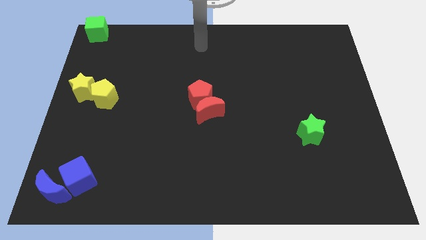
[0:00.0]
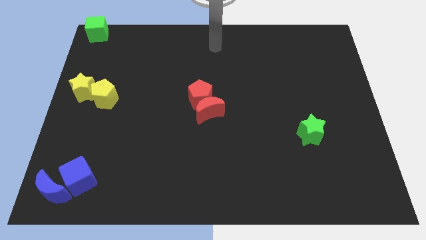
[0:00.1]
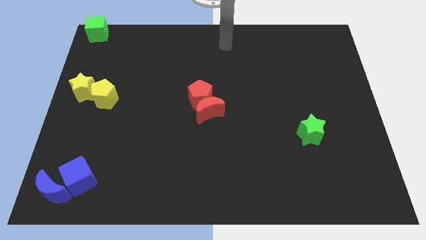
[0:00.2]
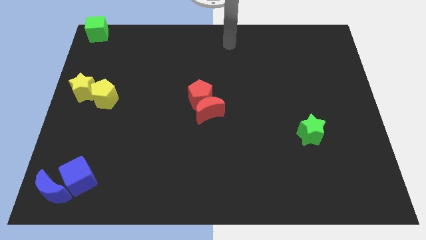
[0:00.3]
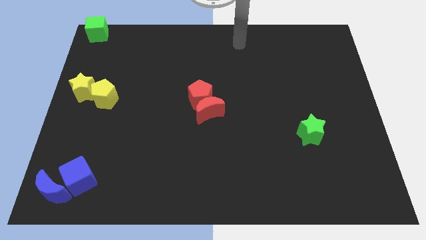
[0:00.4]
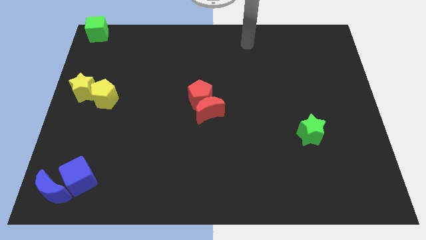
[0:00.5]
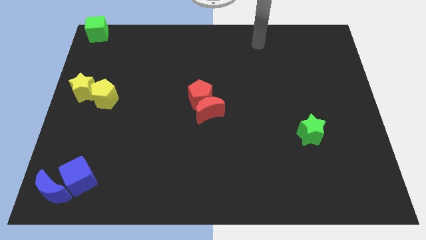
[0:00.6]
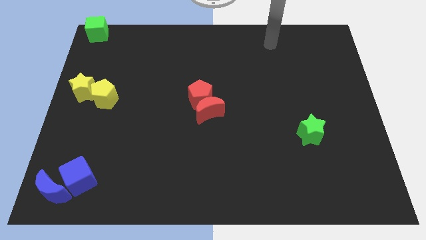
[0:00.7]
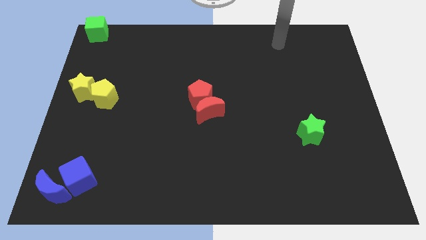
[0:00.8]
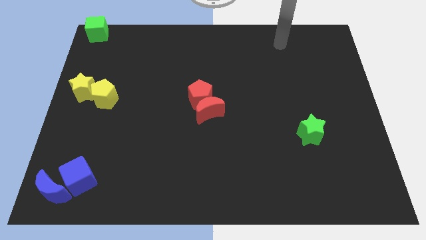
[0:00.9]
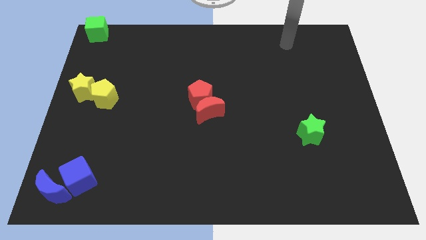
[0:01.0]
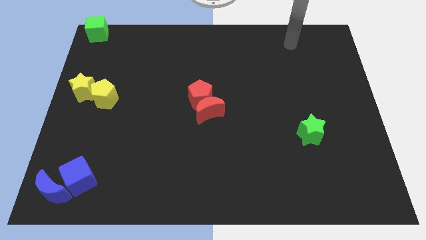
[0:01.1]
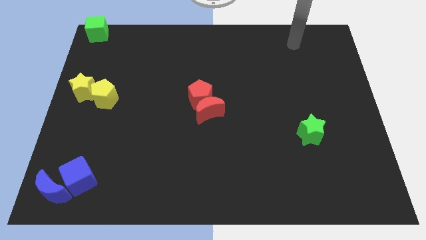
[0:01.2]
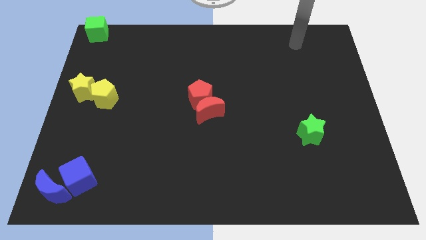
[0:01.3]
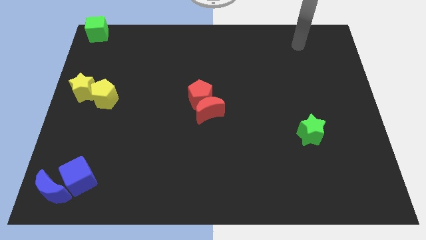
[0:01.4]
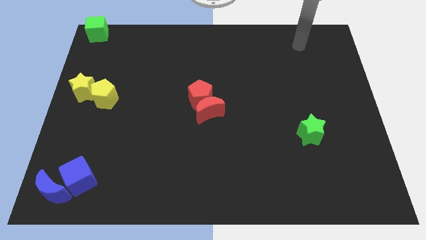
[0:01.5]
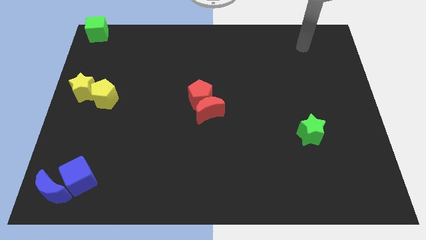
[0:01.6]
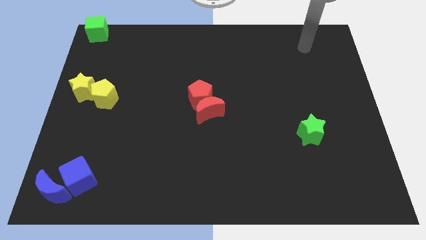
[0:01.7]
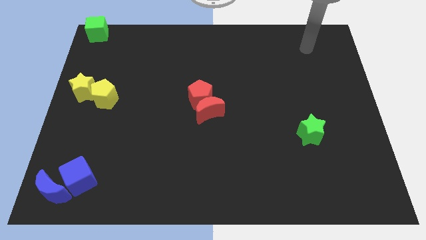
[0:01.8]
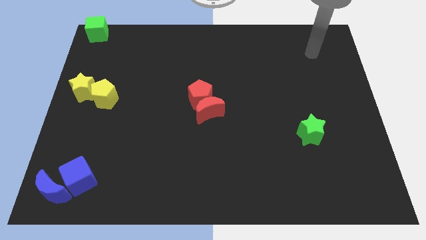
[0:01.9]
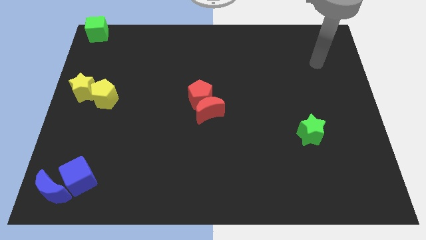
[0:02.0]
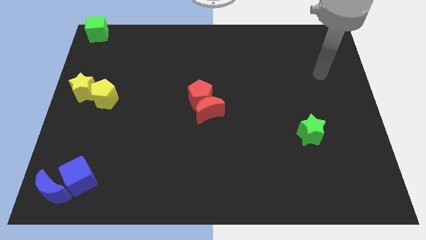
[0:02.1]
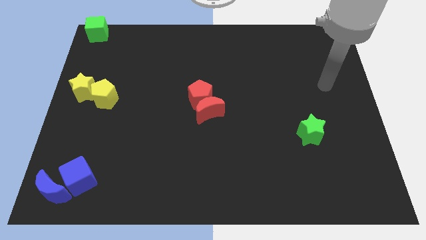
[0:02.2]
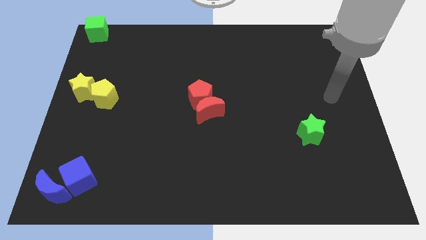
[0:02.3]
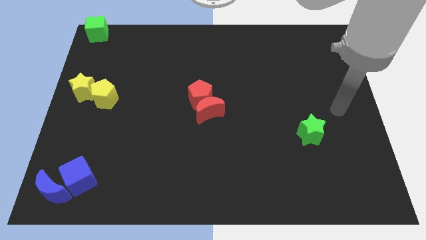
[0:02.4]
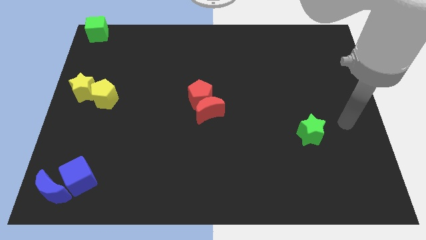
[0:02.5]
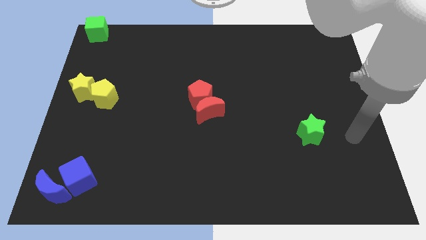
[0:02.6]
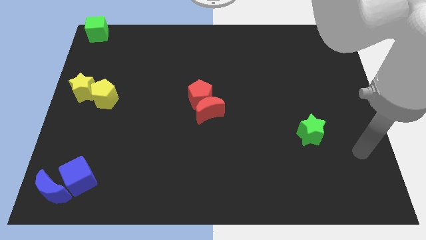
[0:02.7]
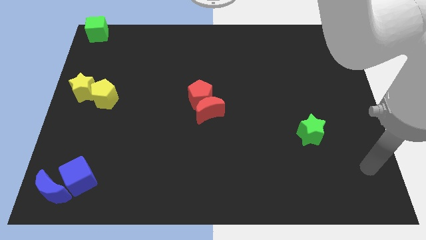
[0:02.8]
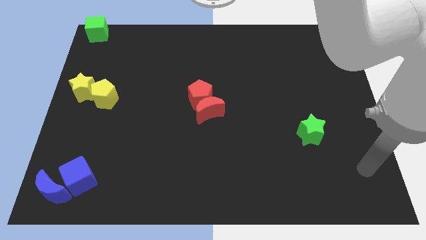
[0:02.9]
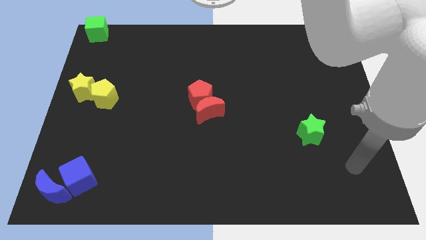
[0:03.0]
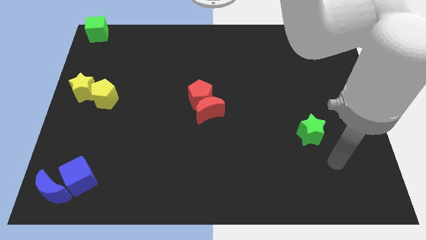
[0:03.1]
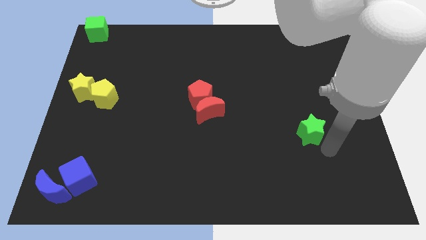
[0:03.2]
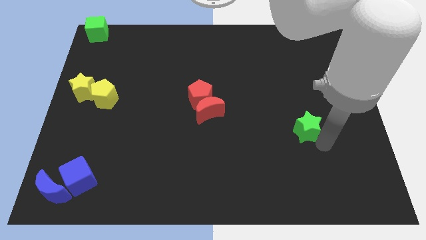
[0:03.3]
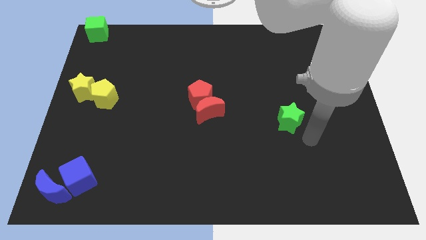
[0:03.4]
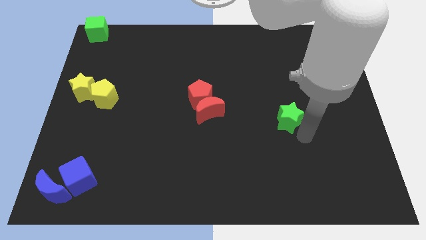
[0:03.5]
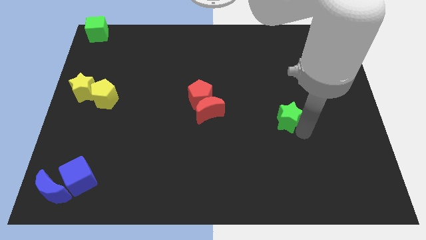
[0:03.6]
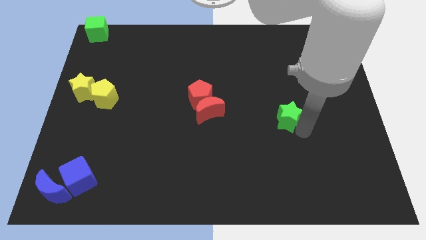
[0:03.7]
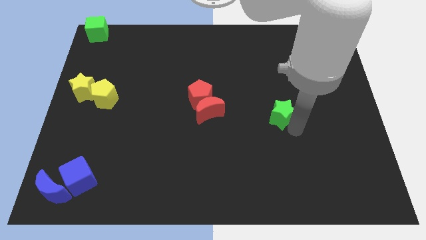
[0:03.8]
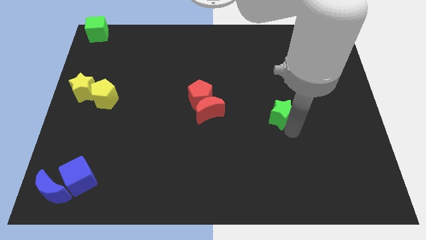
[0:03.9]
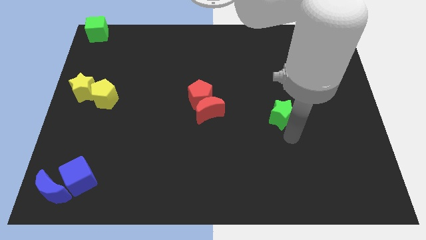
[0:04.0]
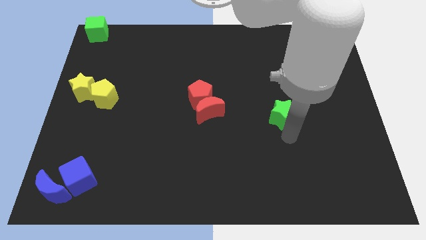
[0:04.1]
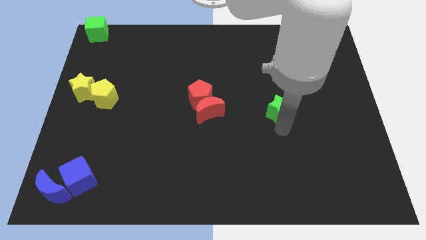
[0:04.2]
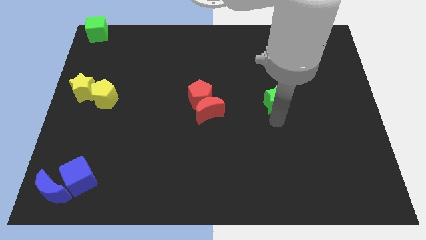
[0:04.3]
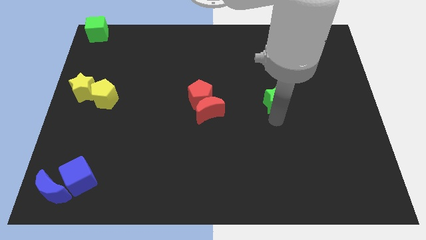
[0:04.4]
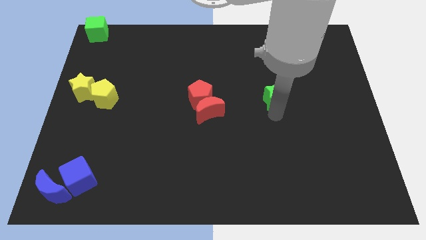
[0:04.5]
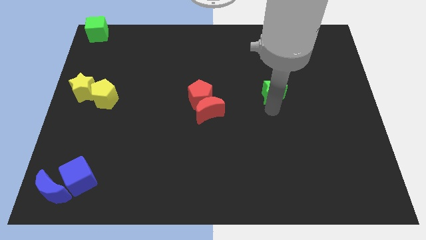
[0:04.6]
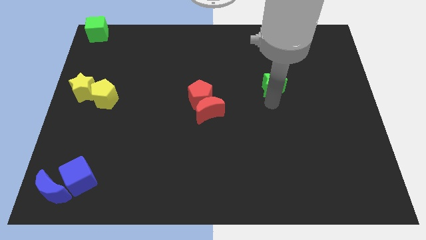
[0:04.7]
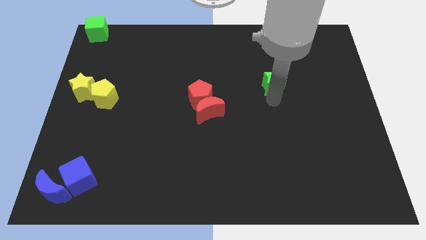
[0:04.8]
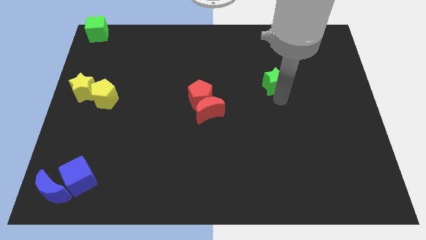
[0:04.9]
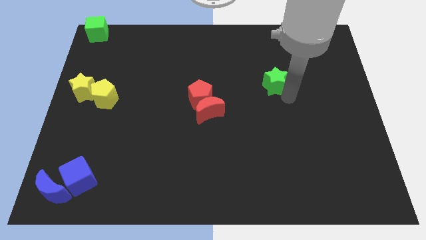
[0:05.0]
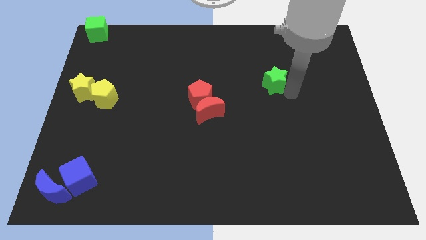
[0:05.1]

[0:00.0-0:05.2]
push the green star towards the top side

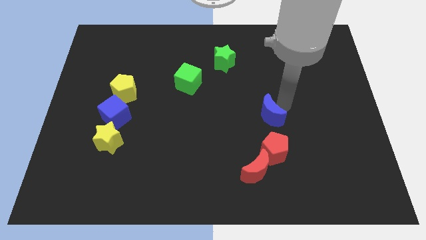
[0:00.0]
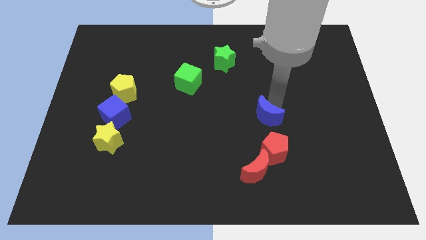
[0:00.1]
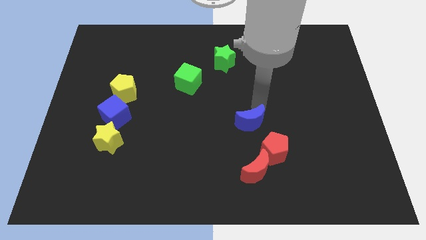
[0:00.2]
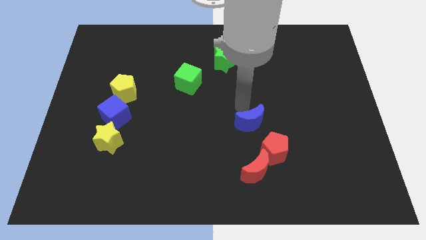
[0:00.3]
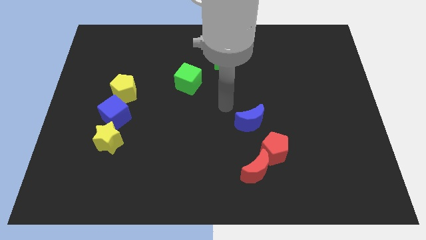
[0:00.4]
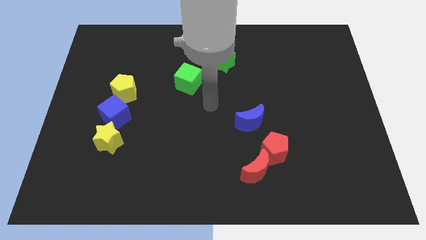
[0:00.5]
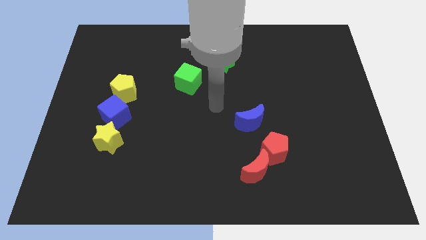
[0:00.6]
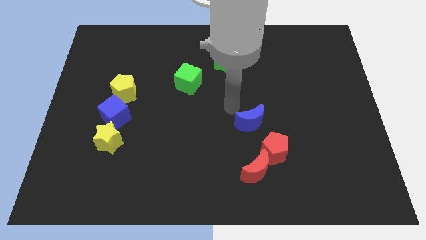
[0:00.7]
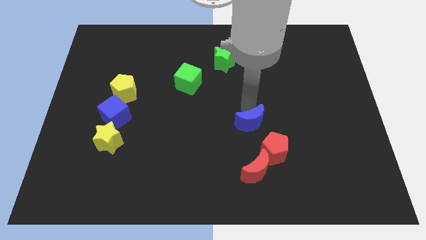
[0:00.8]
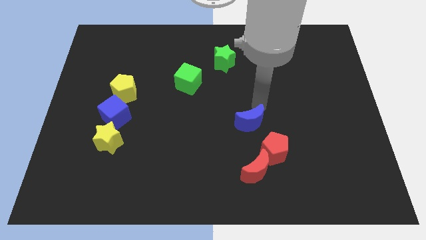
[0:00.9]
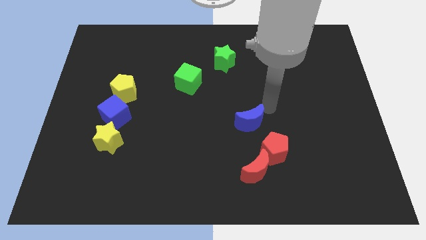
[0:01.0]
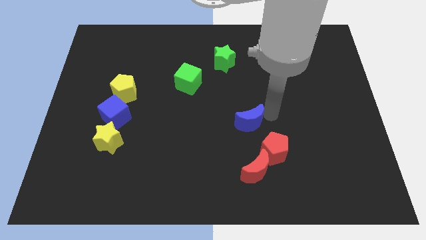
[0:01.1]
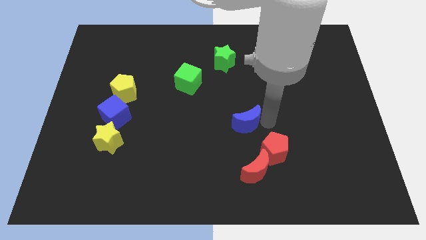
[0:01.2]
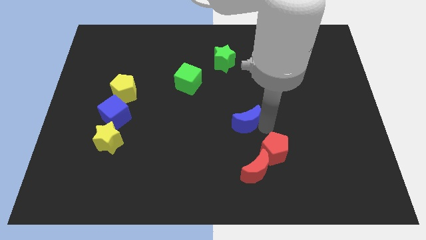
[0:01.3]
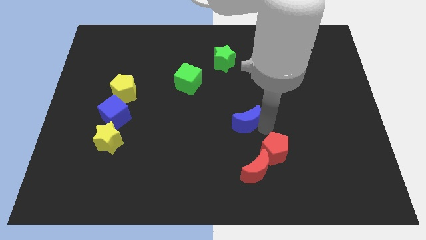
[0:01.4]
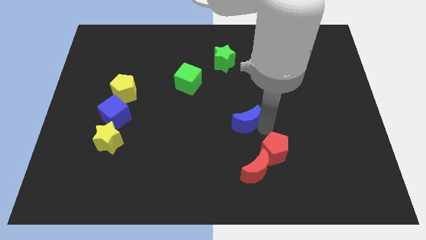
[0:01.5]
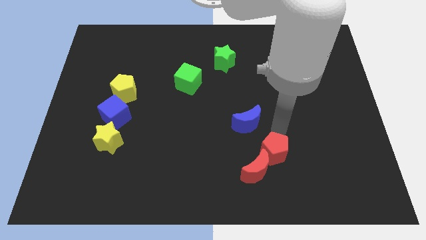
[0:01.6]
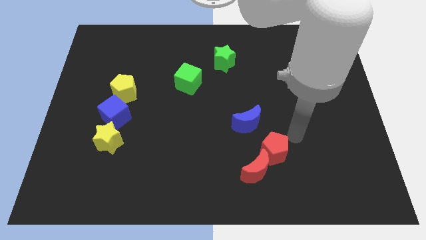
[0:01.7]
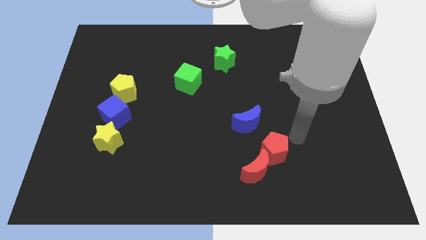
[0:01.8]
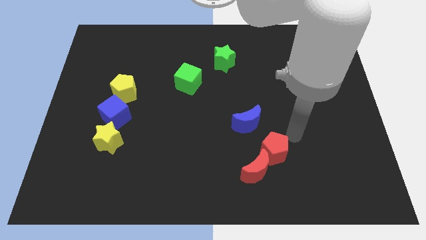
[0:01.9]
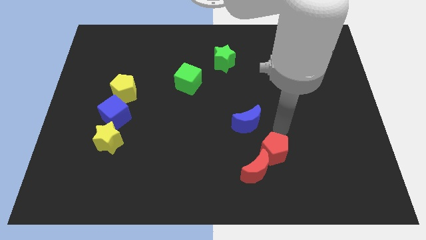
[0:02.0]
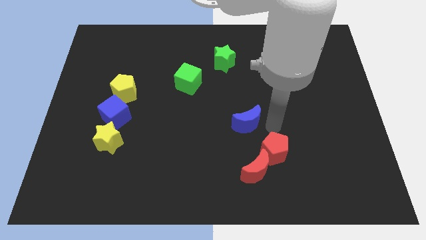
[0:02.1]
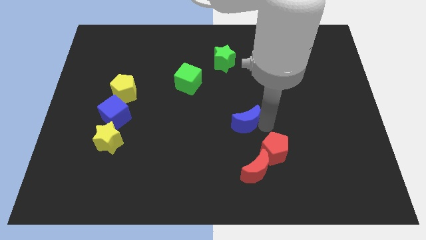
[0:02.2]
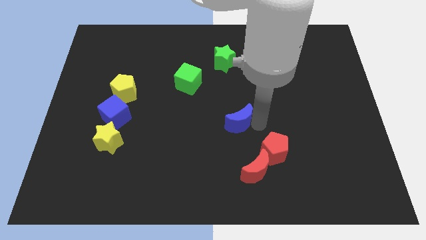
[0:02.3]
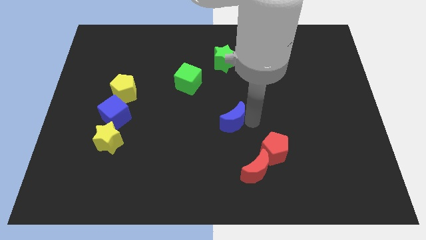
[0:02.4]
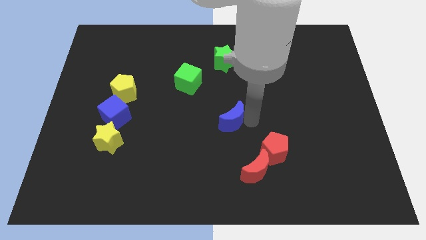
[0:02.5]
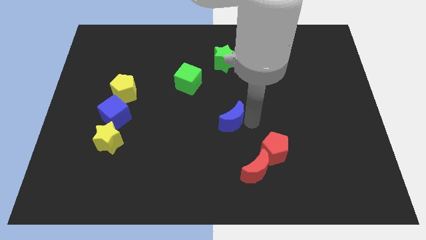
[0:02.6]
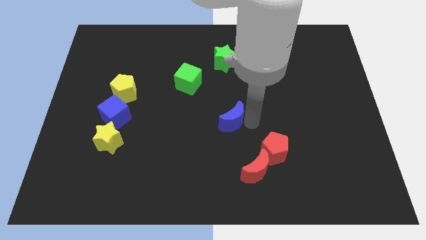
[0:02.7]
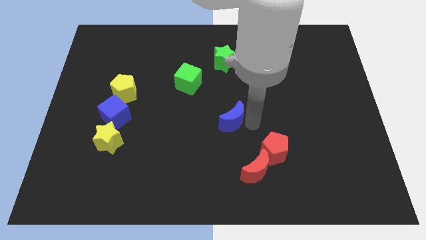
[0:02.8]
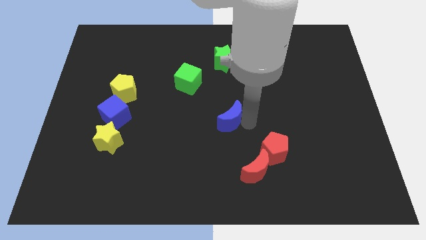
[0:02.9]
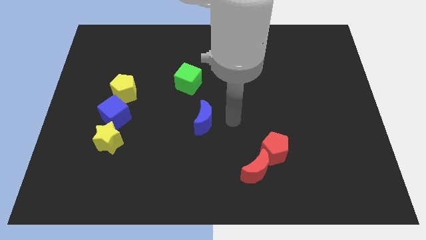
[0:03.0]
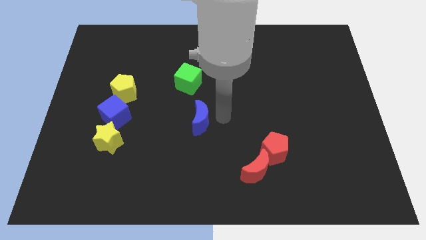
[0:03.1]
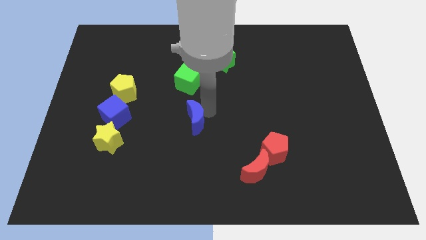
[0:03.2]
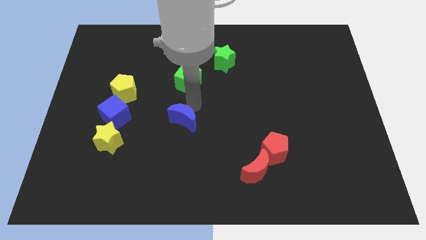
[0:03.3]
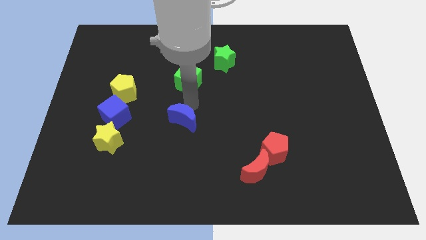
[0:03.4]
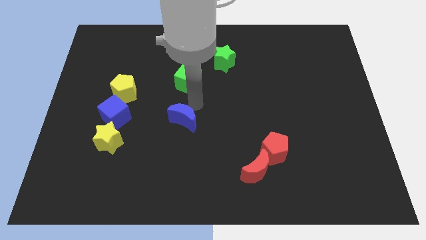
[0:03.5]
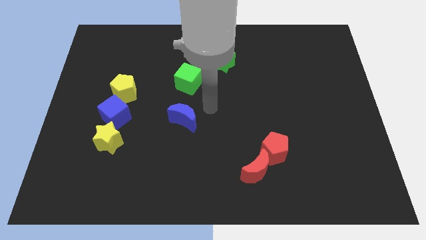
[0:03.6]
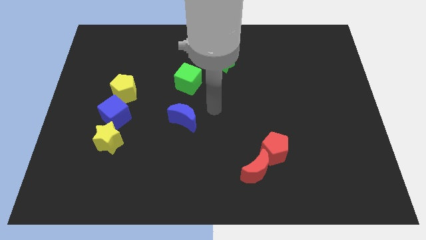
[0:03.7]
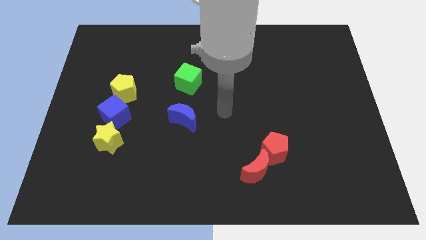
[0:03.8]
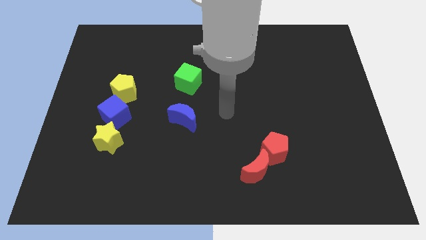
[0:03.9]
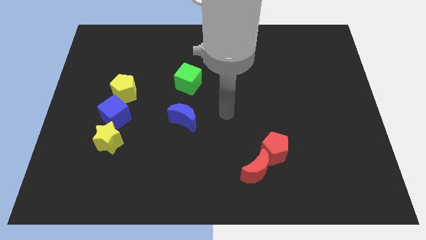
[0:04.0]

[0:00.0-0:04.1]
place the blue crescent in parallel with the blue cube
